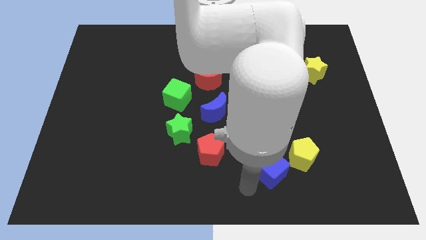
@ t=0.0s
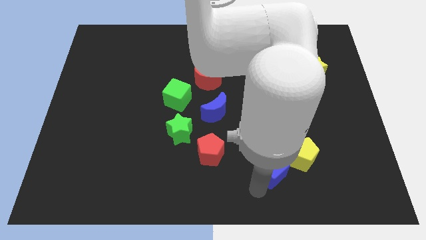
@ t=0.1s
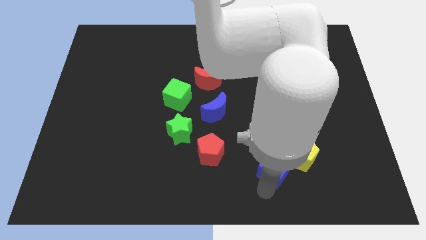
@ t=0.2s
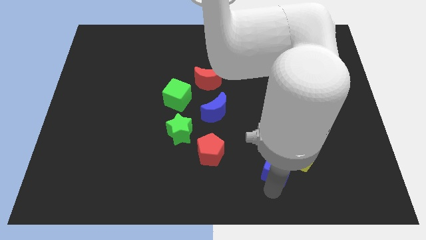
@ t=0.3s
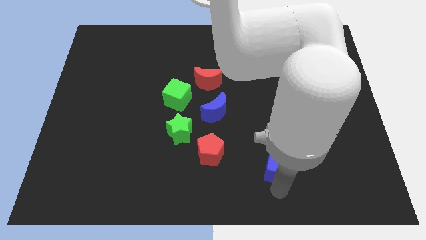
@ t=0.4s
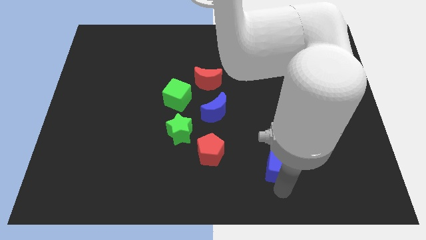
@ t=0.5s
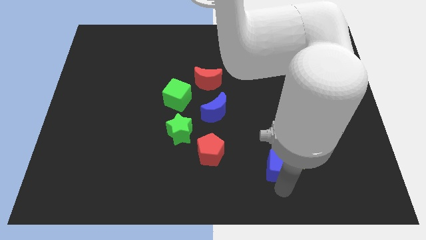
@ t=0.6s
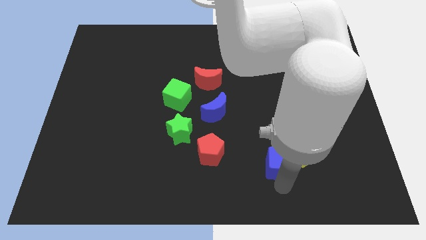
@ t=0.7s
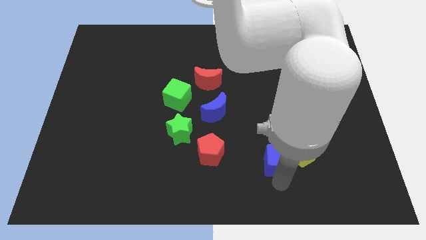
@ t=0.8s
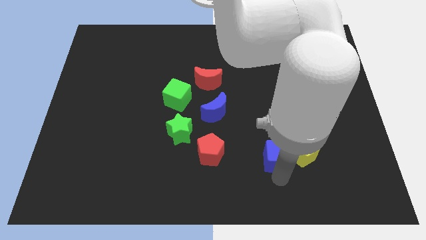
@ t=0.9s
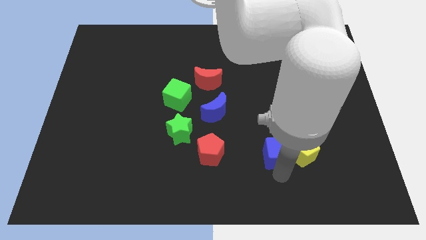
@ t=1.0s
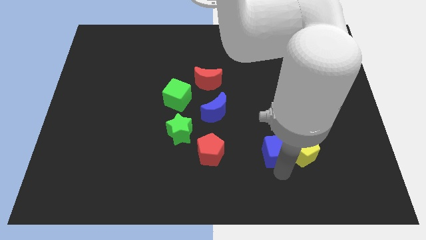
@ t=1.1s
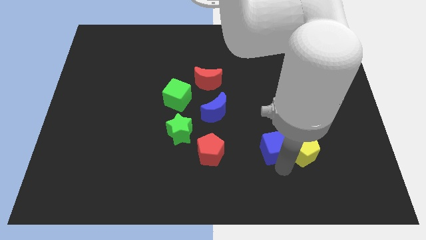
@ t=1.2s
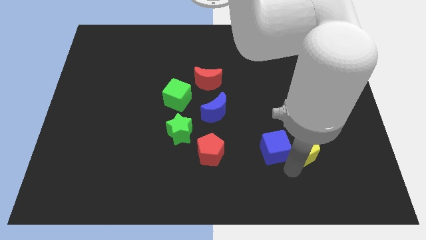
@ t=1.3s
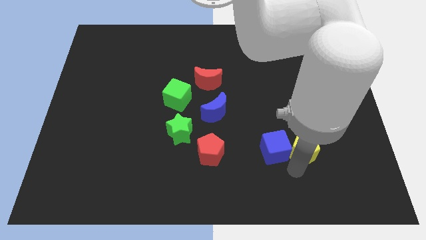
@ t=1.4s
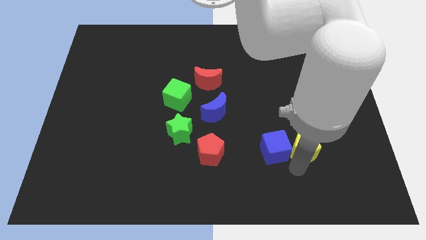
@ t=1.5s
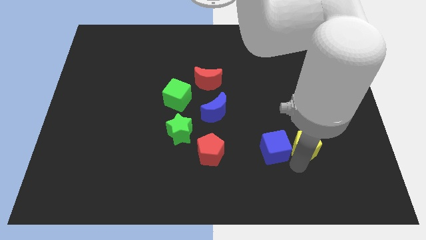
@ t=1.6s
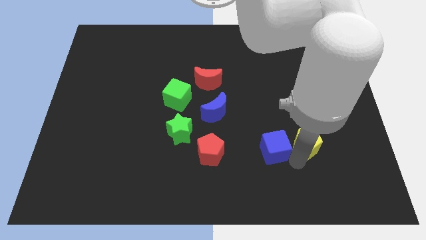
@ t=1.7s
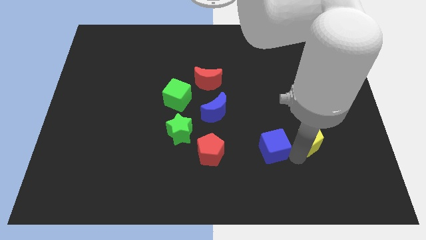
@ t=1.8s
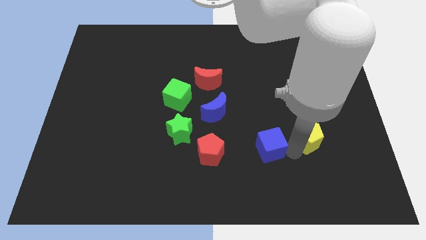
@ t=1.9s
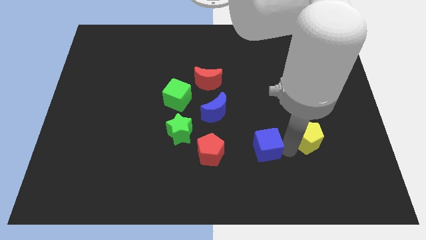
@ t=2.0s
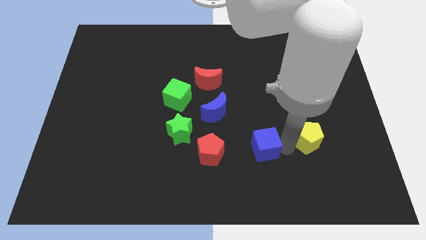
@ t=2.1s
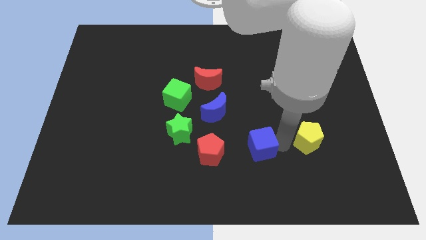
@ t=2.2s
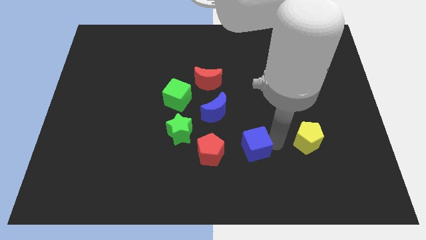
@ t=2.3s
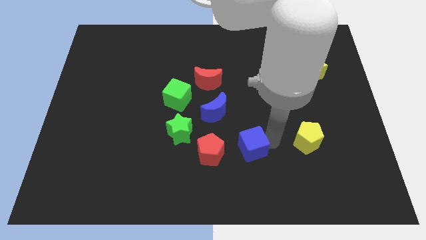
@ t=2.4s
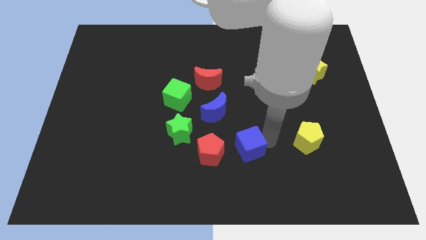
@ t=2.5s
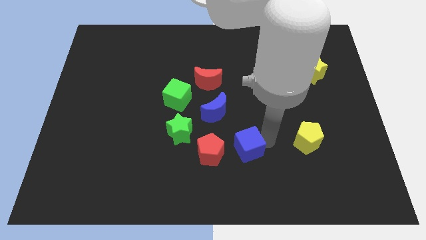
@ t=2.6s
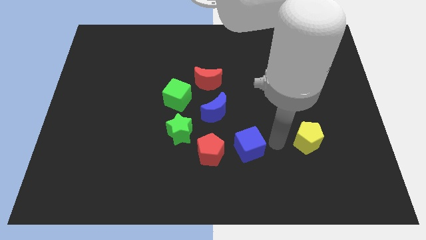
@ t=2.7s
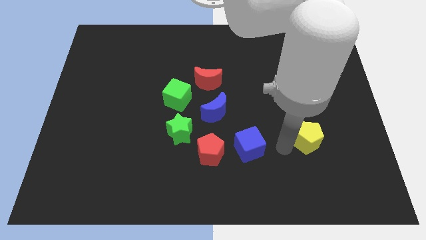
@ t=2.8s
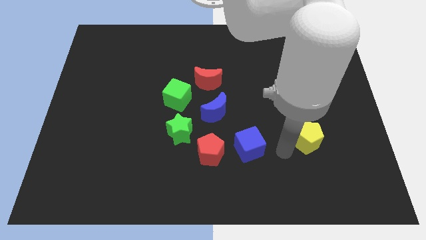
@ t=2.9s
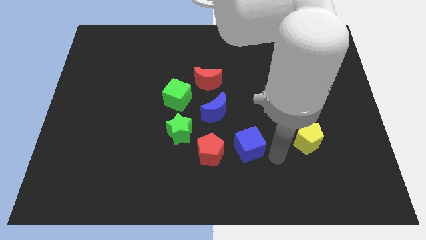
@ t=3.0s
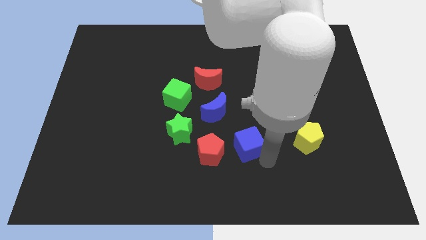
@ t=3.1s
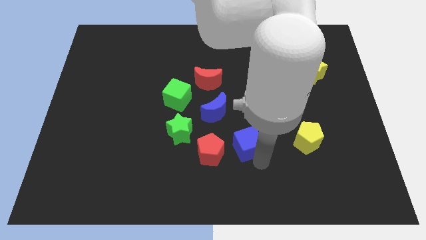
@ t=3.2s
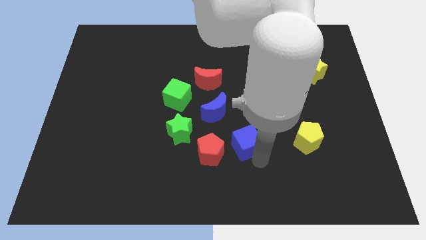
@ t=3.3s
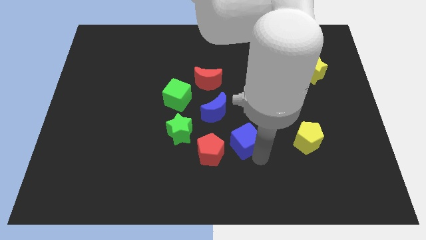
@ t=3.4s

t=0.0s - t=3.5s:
push the blue cube slightly up towards the top of the board

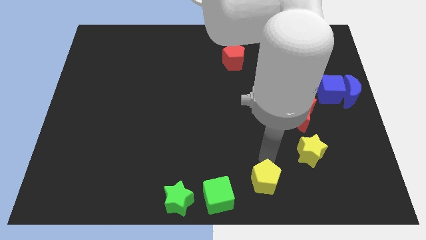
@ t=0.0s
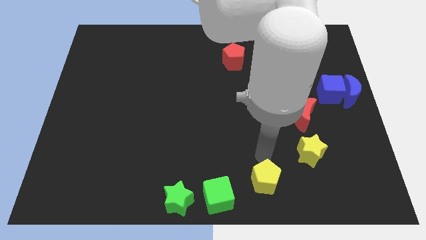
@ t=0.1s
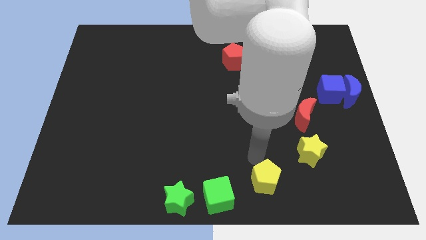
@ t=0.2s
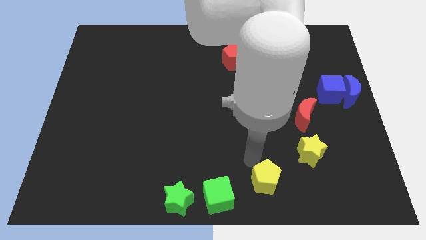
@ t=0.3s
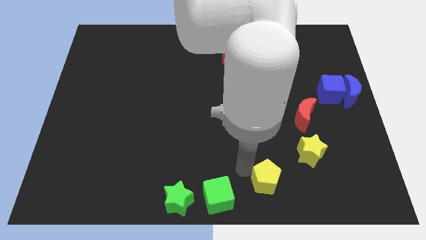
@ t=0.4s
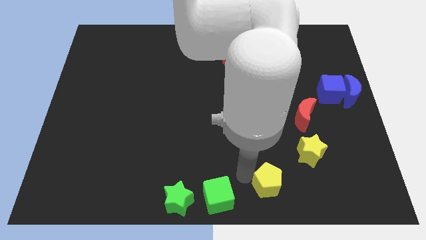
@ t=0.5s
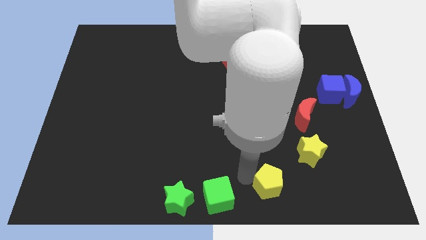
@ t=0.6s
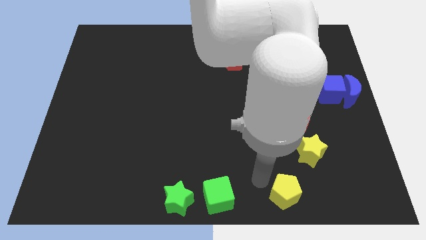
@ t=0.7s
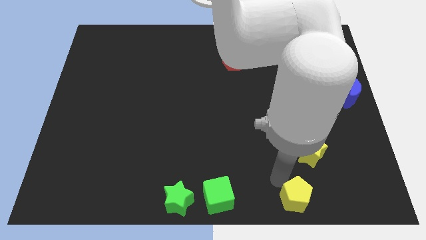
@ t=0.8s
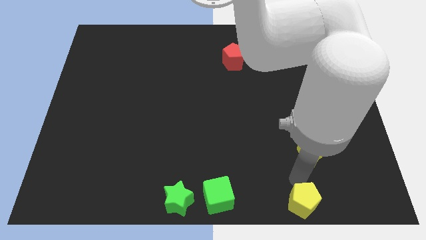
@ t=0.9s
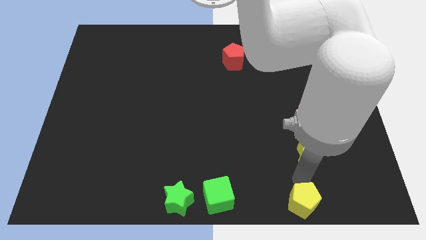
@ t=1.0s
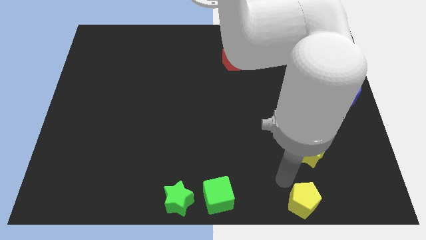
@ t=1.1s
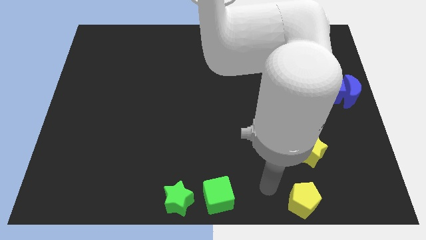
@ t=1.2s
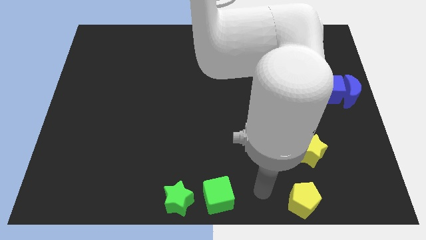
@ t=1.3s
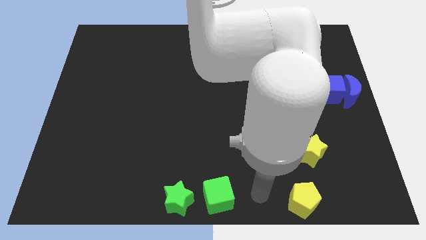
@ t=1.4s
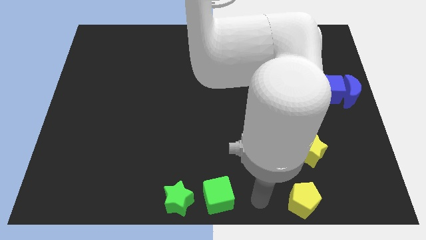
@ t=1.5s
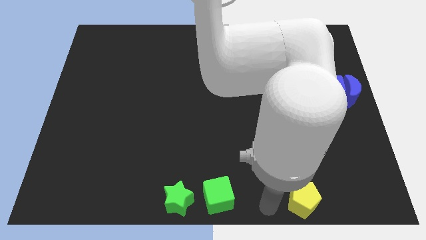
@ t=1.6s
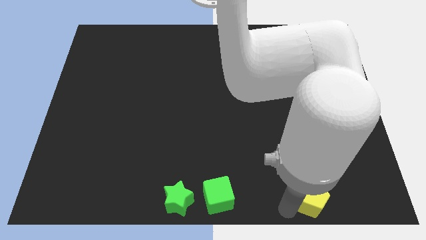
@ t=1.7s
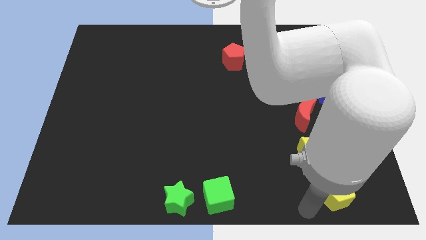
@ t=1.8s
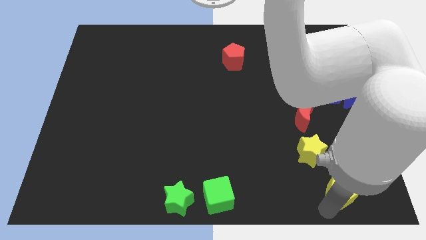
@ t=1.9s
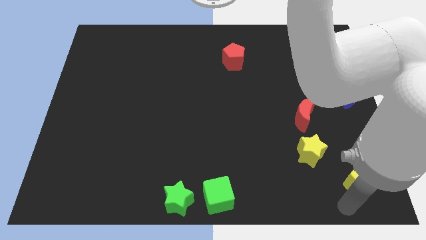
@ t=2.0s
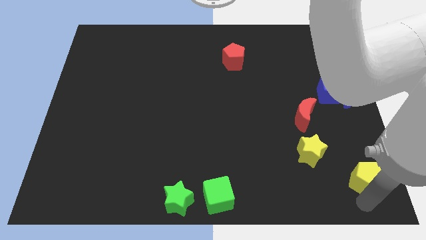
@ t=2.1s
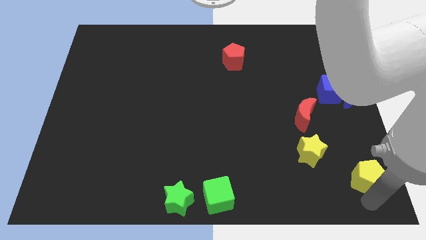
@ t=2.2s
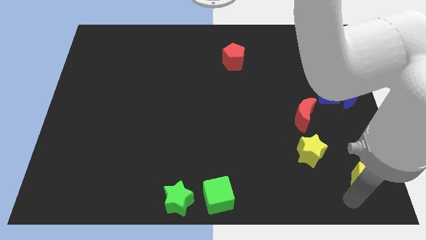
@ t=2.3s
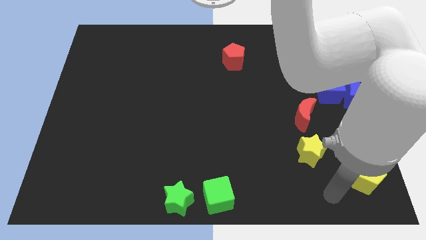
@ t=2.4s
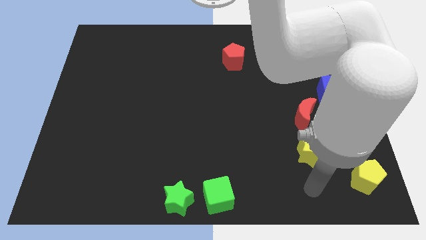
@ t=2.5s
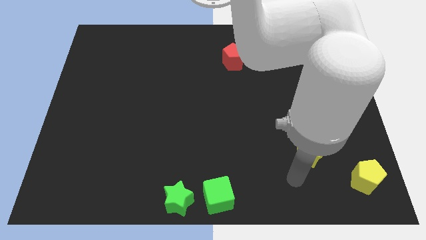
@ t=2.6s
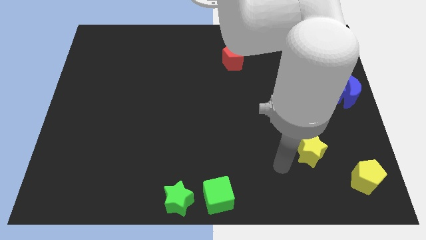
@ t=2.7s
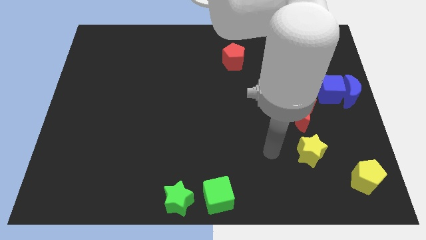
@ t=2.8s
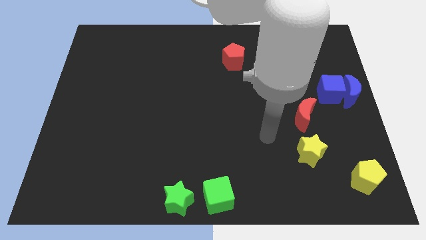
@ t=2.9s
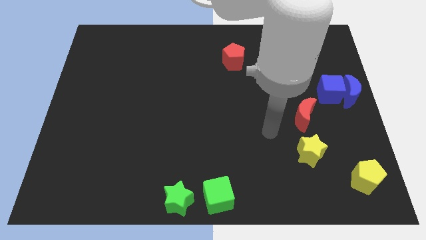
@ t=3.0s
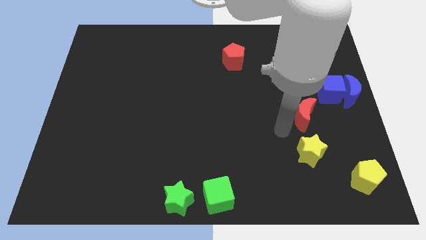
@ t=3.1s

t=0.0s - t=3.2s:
move yellow pentagon towards the bottom right

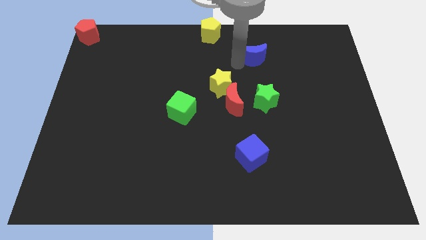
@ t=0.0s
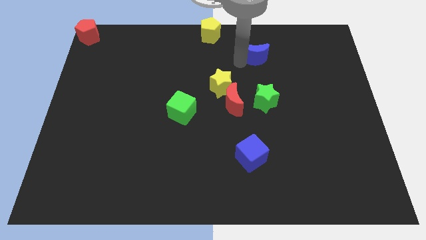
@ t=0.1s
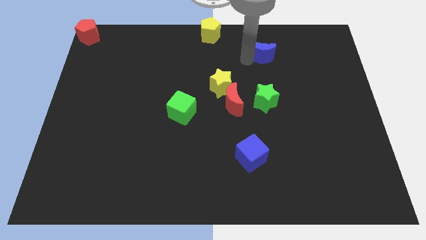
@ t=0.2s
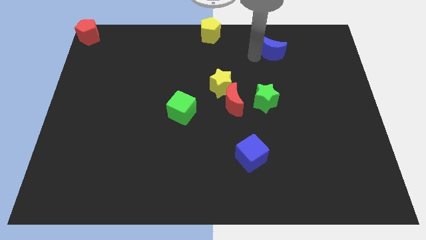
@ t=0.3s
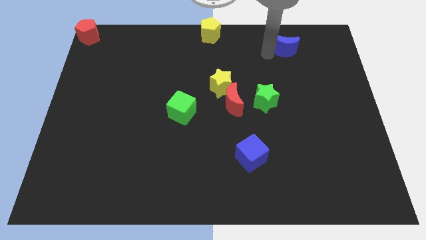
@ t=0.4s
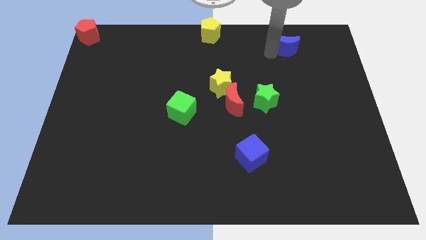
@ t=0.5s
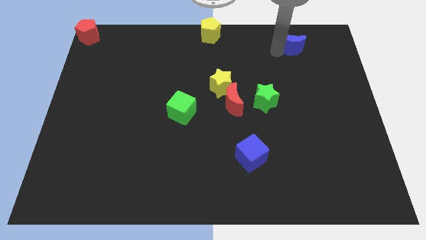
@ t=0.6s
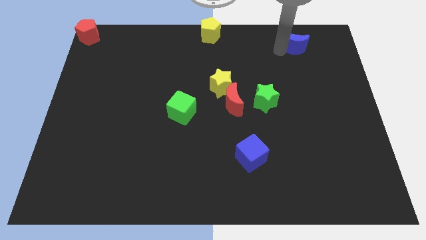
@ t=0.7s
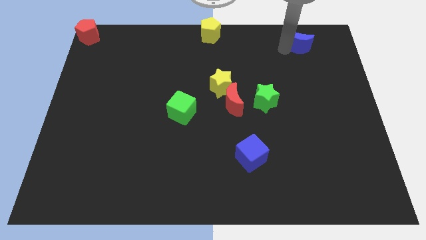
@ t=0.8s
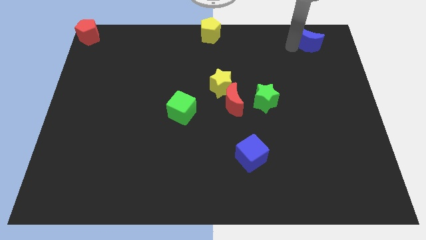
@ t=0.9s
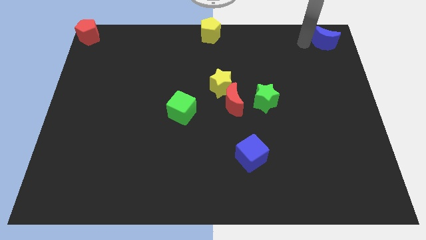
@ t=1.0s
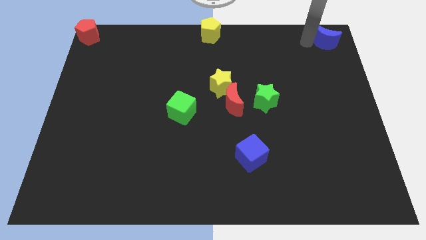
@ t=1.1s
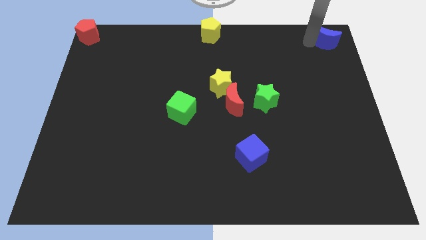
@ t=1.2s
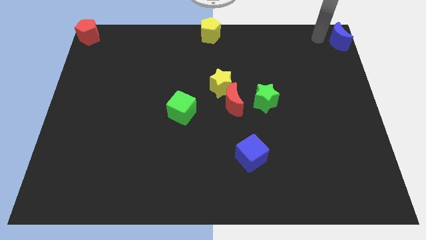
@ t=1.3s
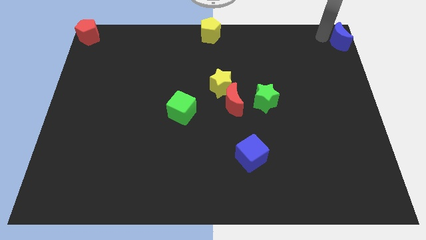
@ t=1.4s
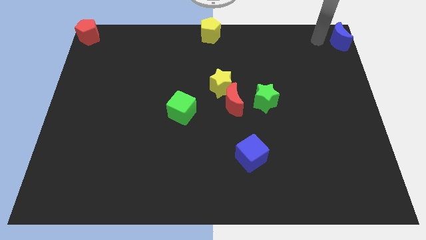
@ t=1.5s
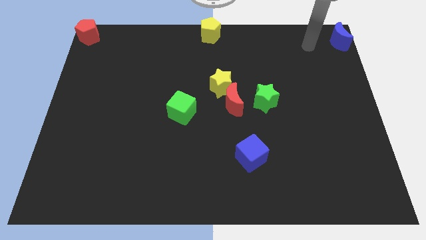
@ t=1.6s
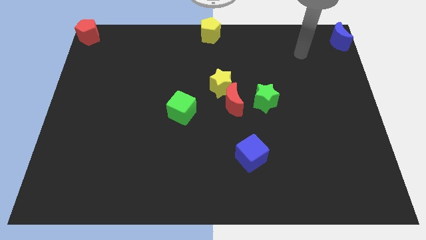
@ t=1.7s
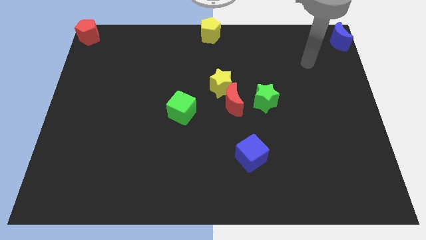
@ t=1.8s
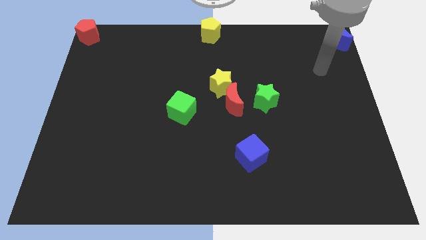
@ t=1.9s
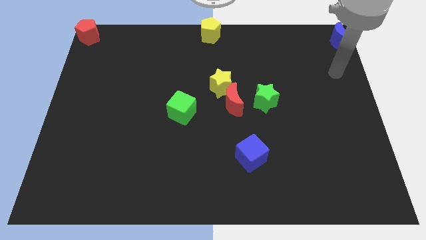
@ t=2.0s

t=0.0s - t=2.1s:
slide blue moon to the top right corner
